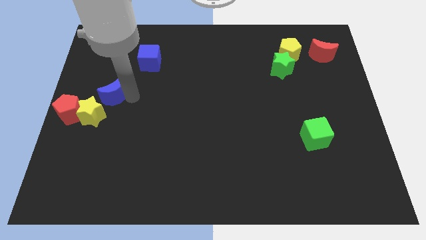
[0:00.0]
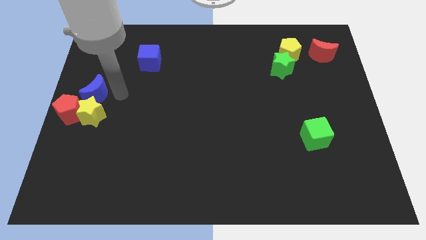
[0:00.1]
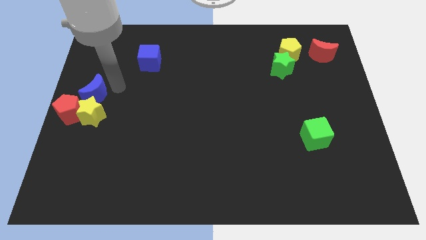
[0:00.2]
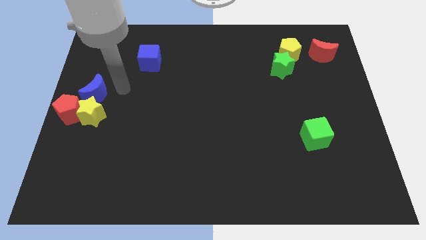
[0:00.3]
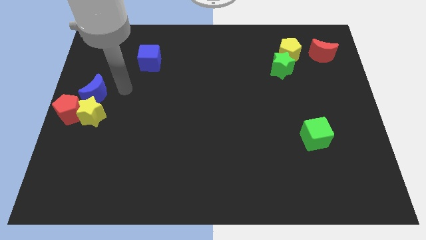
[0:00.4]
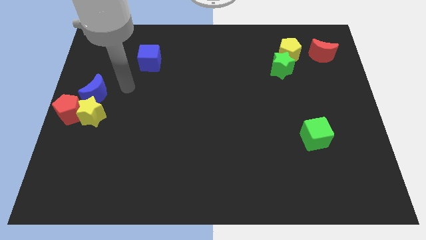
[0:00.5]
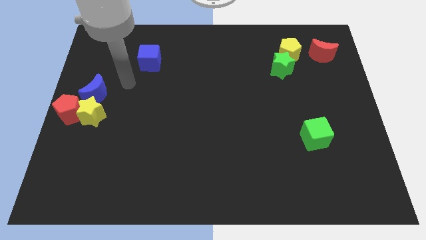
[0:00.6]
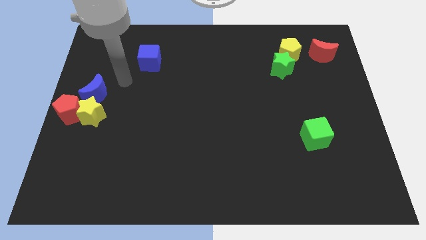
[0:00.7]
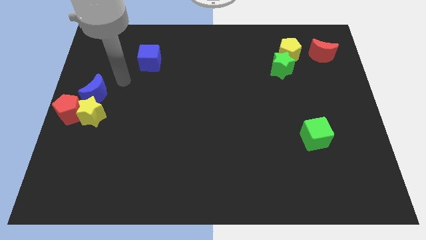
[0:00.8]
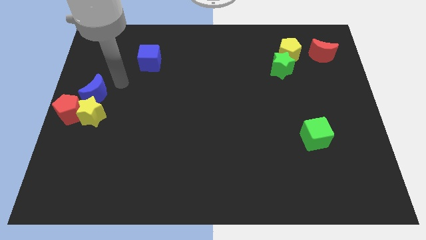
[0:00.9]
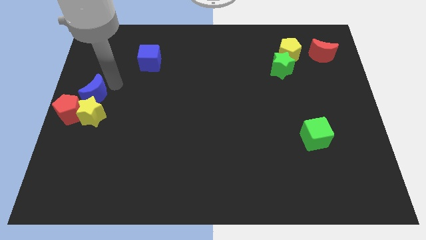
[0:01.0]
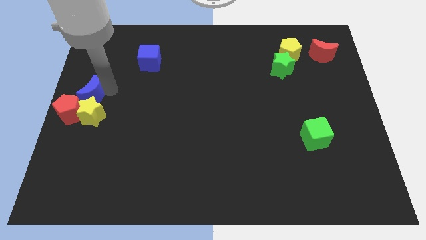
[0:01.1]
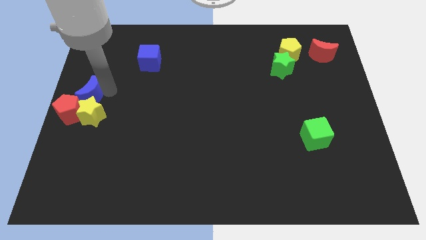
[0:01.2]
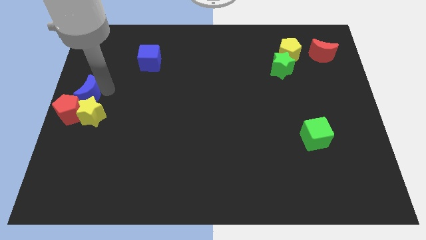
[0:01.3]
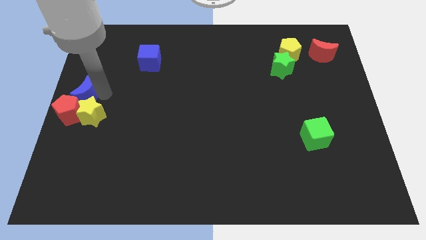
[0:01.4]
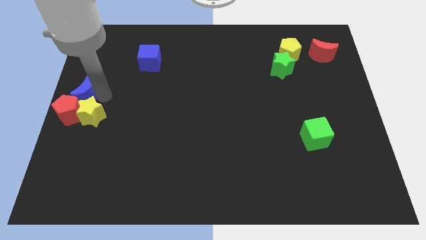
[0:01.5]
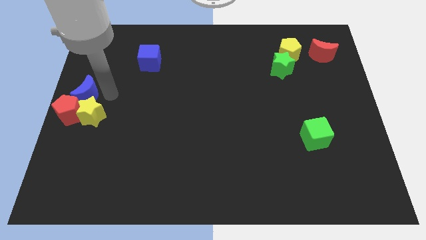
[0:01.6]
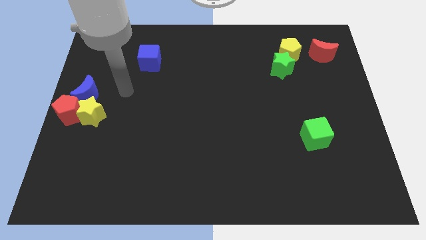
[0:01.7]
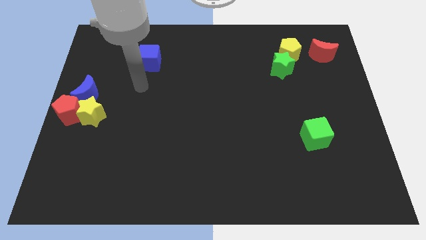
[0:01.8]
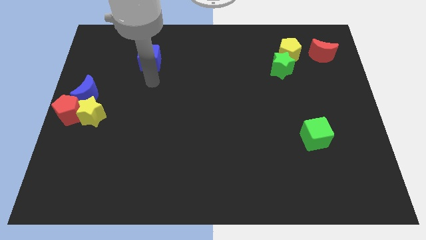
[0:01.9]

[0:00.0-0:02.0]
place your arm below the blue cube

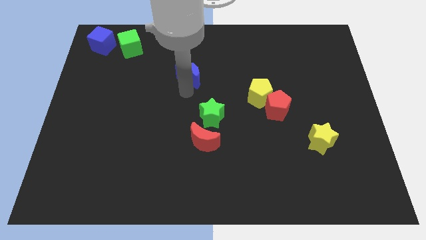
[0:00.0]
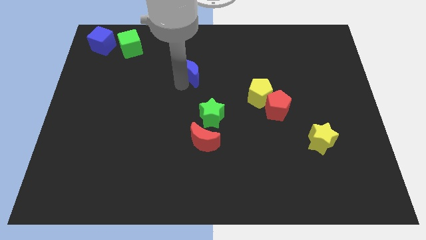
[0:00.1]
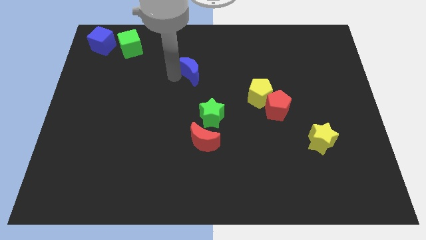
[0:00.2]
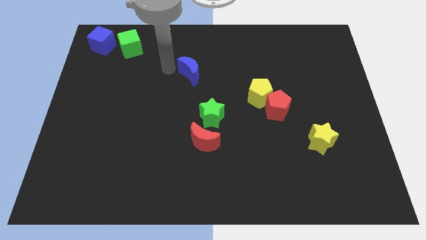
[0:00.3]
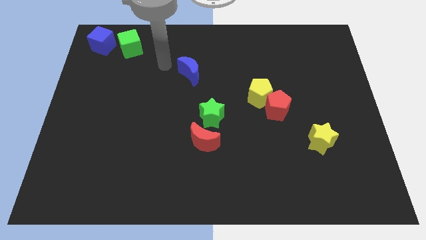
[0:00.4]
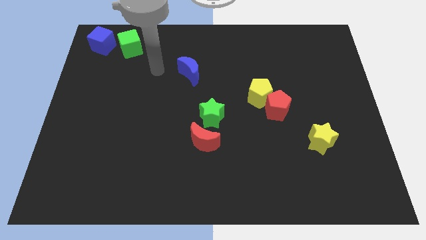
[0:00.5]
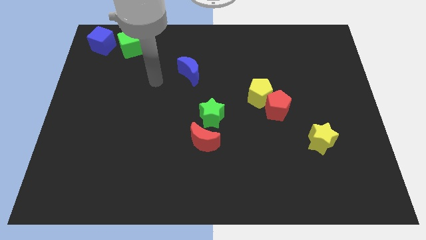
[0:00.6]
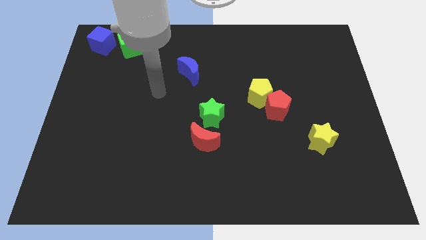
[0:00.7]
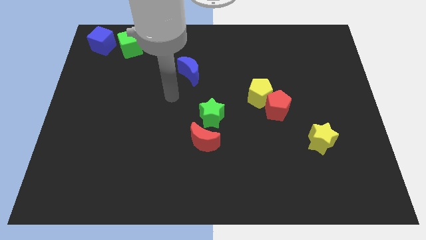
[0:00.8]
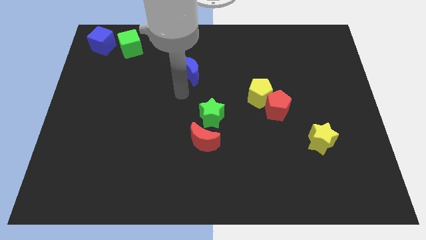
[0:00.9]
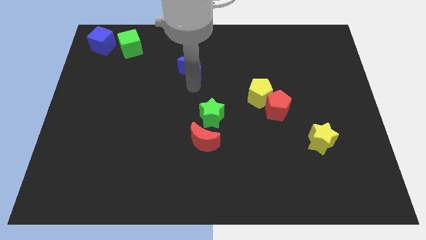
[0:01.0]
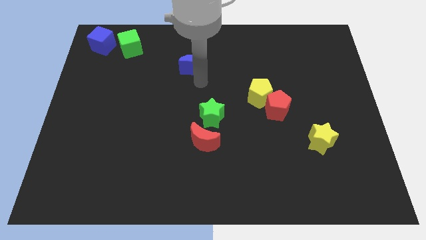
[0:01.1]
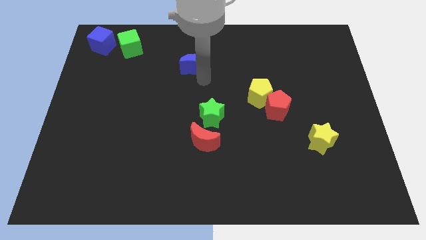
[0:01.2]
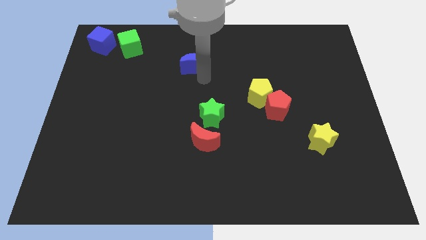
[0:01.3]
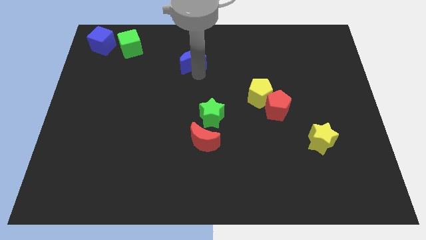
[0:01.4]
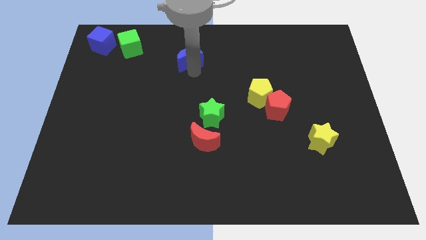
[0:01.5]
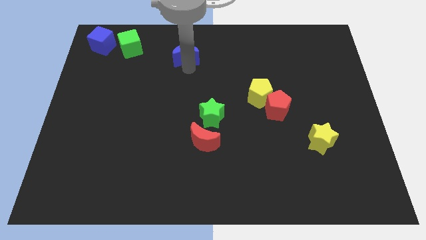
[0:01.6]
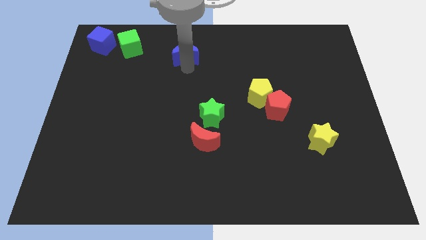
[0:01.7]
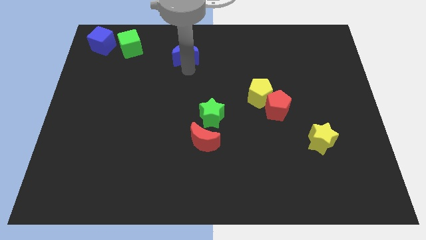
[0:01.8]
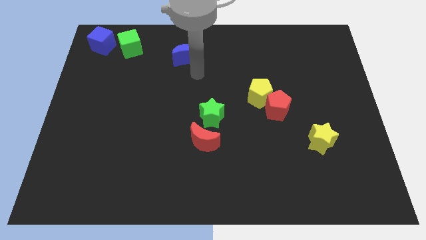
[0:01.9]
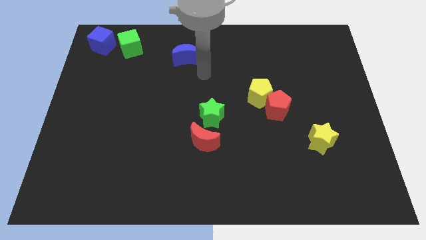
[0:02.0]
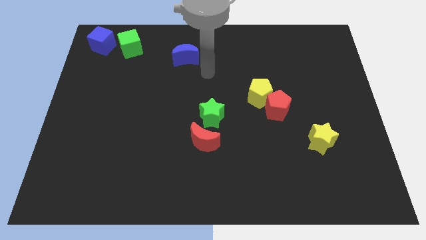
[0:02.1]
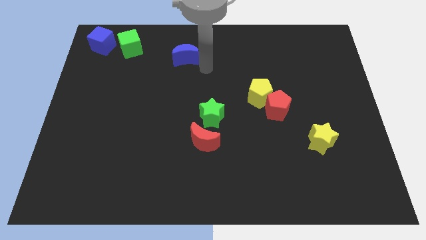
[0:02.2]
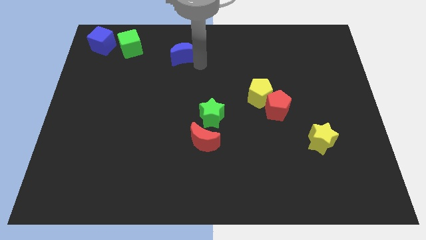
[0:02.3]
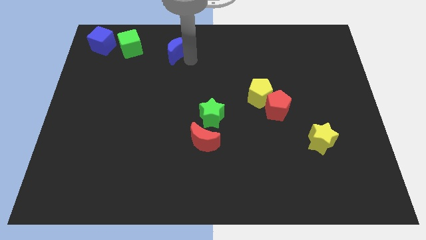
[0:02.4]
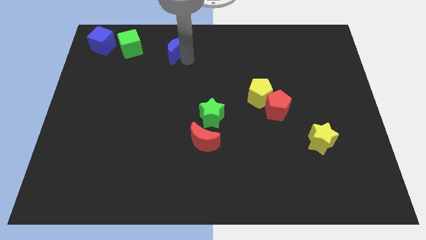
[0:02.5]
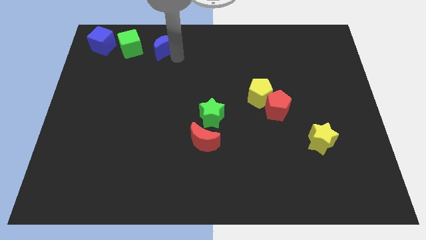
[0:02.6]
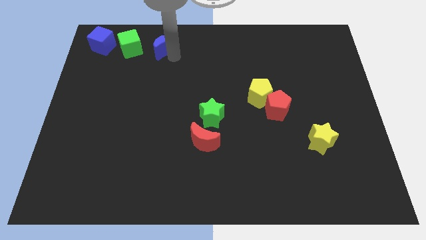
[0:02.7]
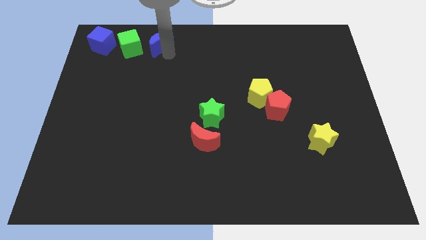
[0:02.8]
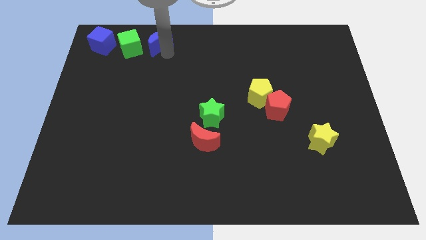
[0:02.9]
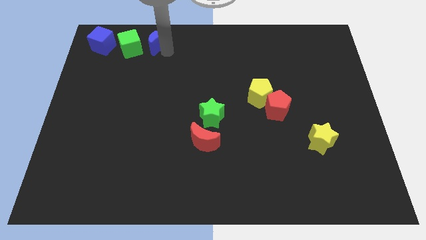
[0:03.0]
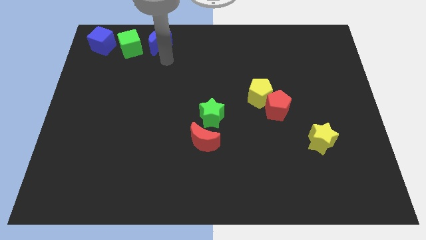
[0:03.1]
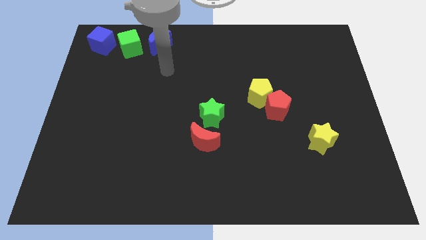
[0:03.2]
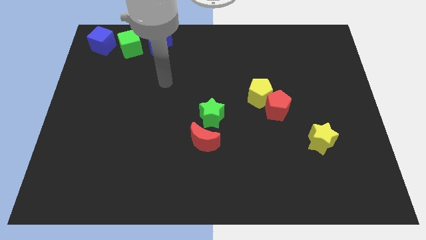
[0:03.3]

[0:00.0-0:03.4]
move blue moon towards the top side of the board

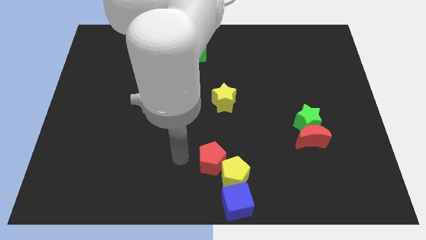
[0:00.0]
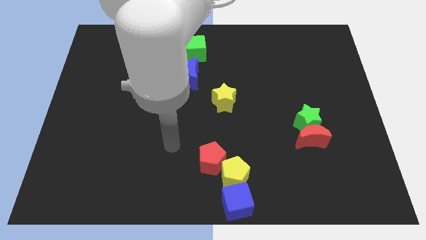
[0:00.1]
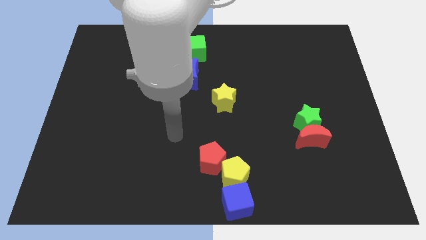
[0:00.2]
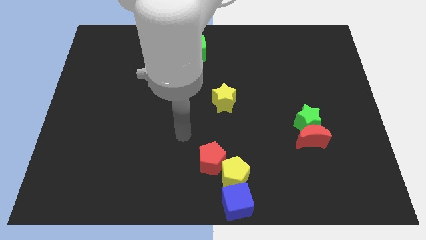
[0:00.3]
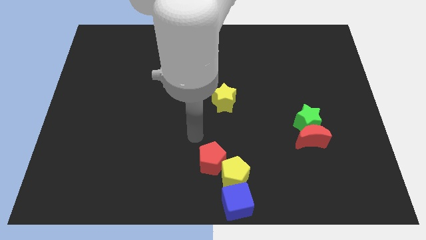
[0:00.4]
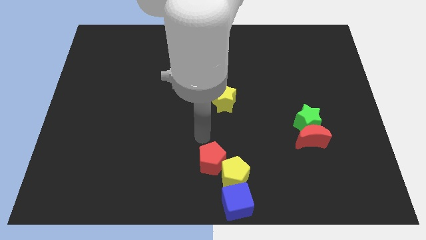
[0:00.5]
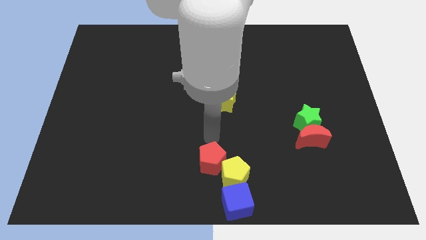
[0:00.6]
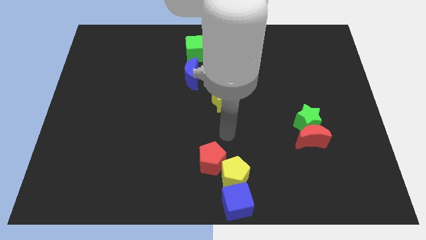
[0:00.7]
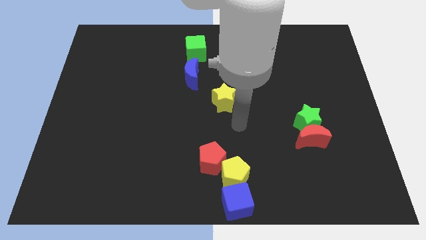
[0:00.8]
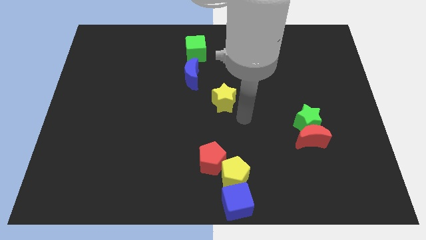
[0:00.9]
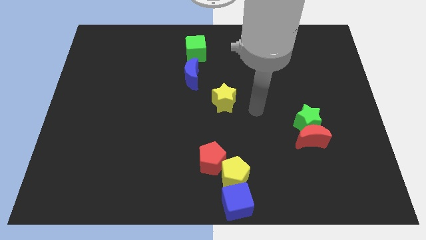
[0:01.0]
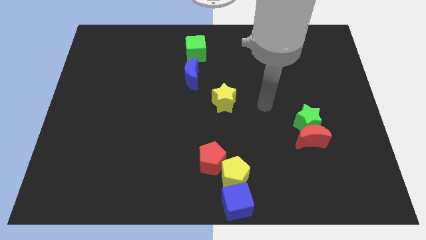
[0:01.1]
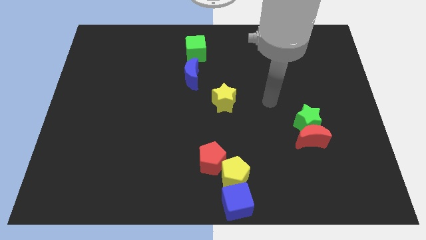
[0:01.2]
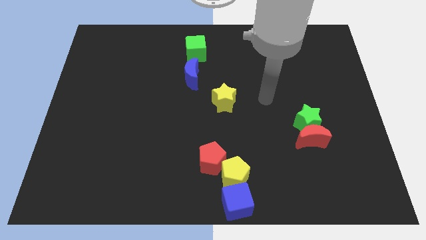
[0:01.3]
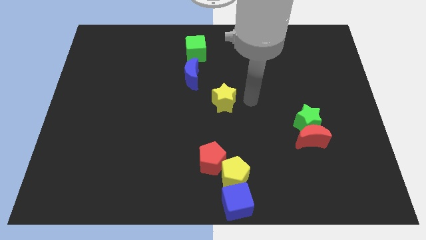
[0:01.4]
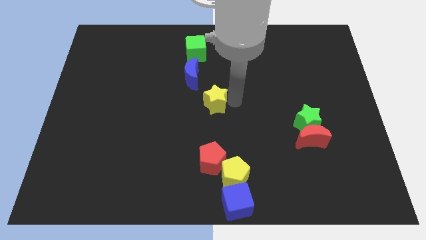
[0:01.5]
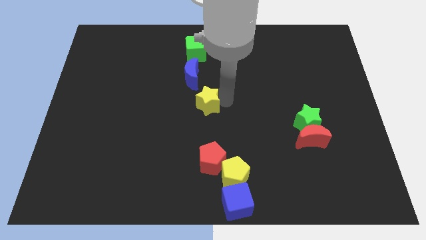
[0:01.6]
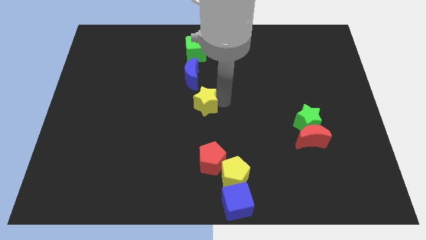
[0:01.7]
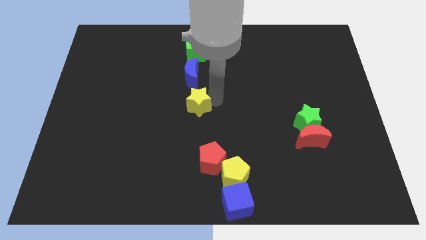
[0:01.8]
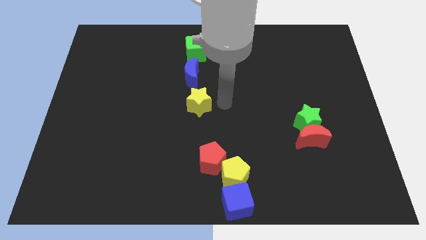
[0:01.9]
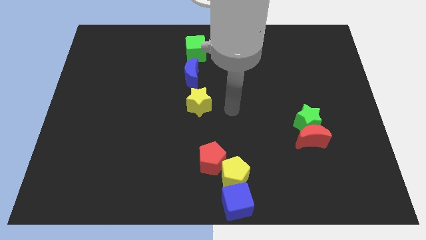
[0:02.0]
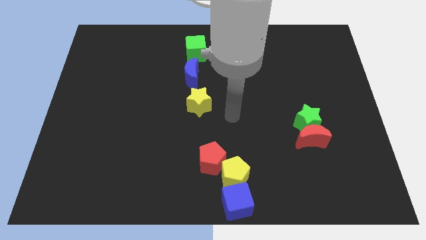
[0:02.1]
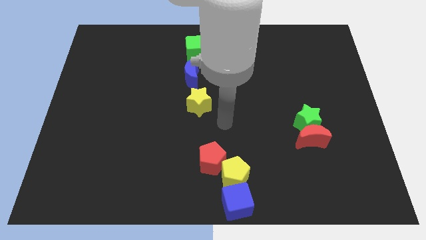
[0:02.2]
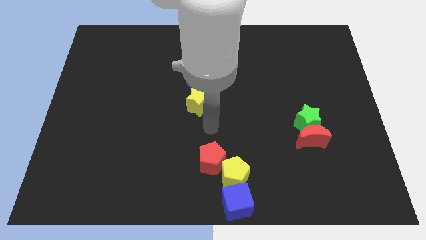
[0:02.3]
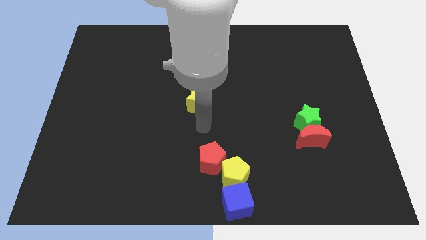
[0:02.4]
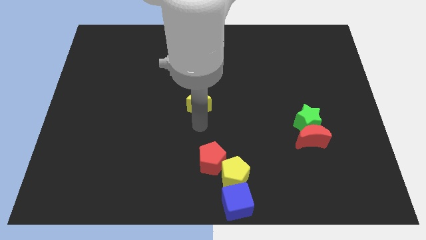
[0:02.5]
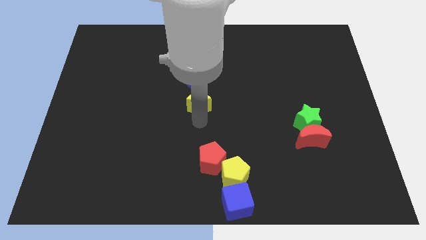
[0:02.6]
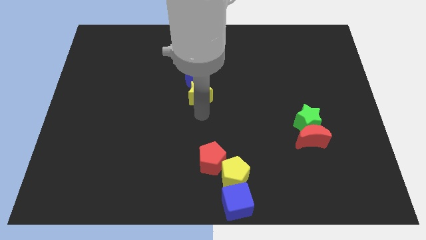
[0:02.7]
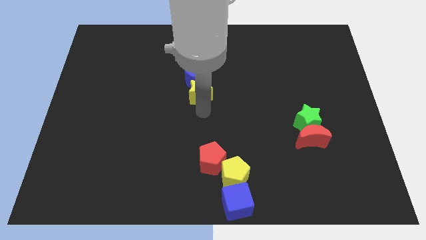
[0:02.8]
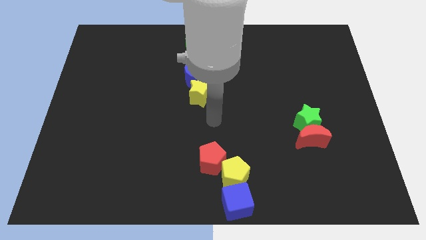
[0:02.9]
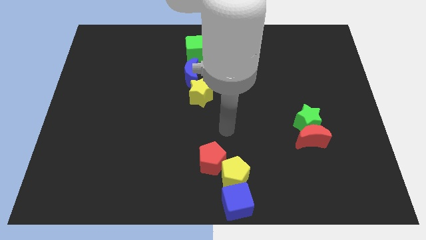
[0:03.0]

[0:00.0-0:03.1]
push the yellow star below into the blue moon

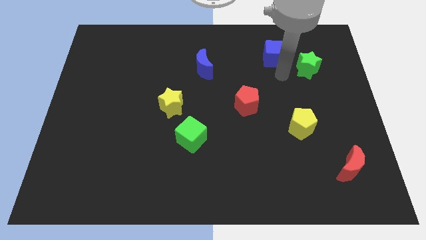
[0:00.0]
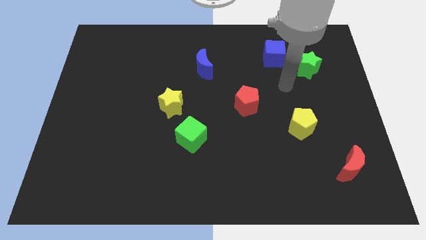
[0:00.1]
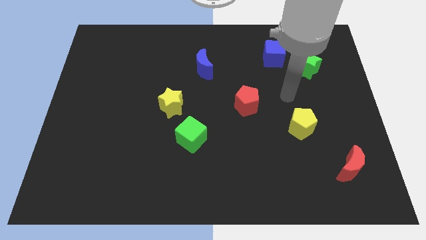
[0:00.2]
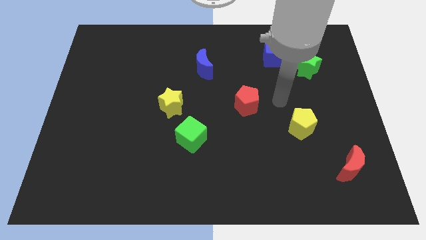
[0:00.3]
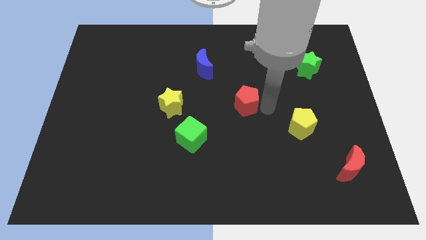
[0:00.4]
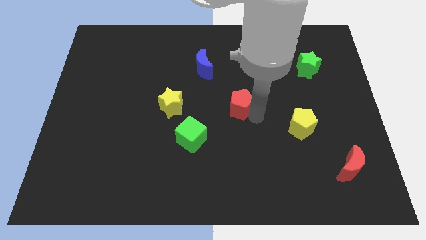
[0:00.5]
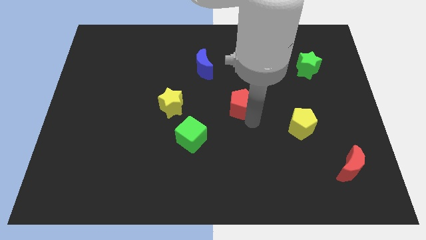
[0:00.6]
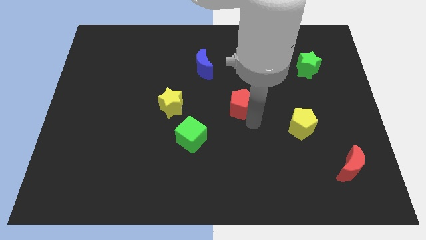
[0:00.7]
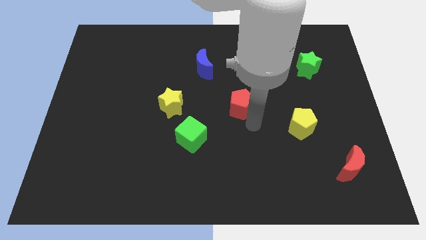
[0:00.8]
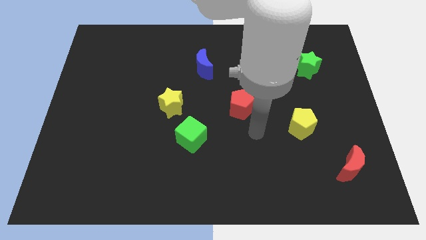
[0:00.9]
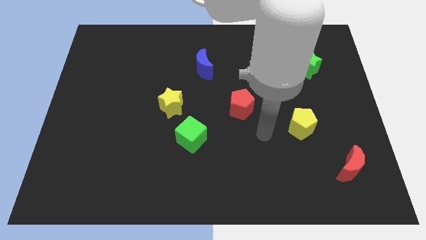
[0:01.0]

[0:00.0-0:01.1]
touch the red pentagon
